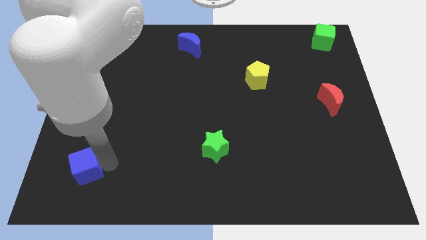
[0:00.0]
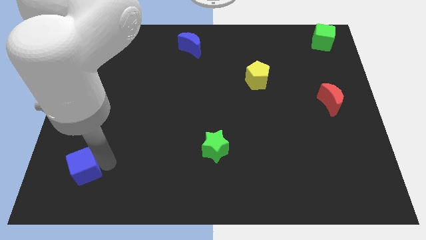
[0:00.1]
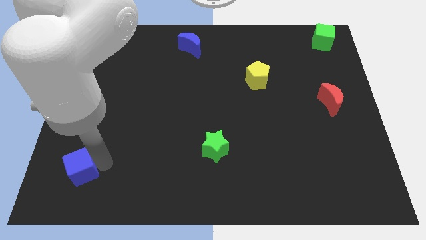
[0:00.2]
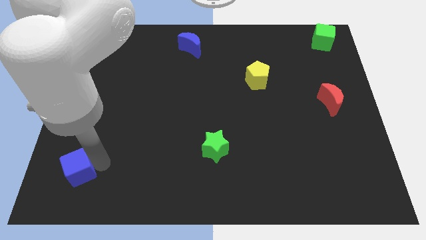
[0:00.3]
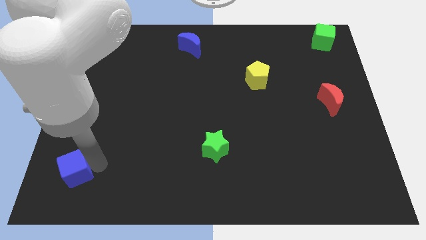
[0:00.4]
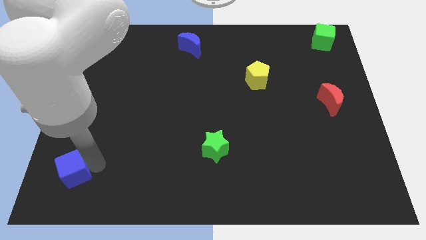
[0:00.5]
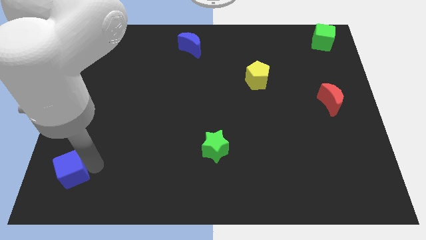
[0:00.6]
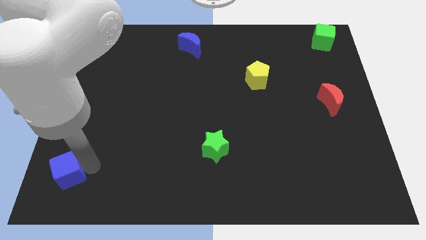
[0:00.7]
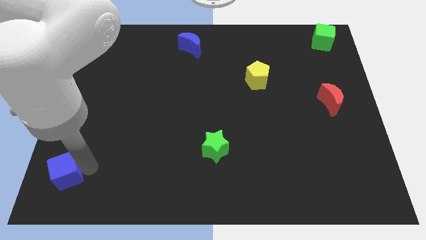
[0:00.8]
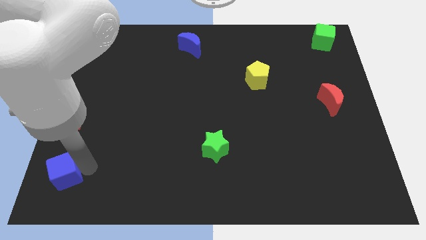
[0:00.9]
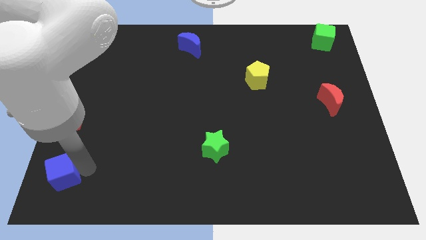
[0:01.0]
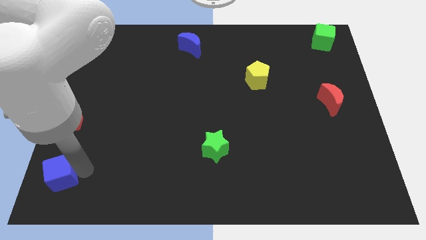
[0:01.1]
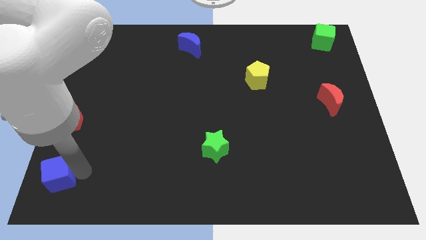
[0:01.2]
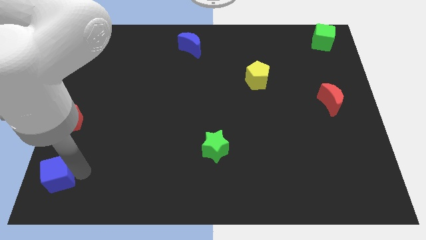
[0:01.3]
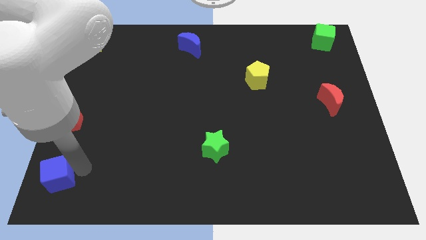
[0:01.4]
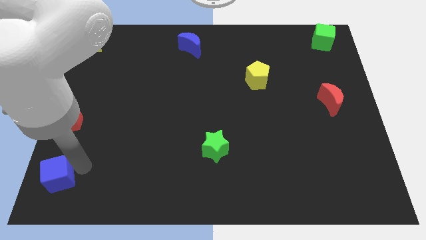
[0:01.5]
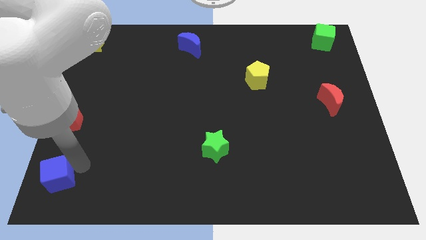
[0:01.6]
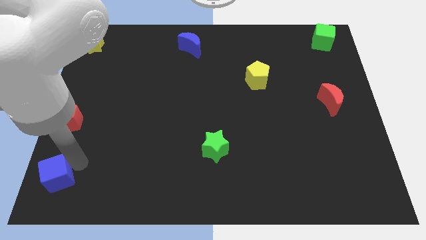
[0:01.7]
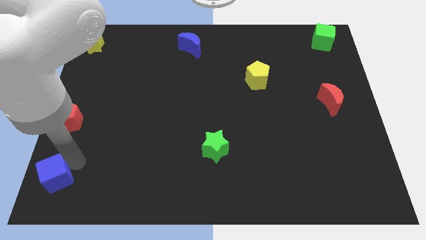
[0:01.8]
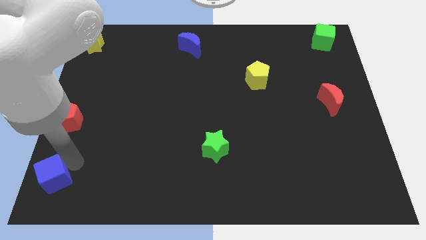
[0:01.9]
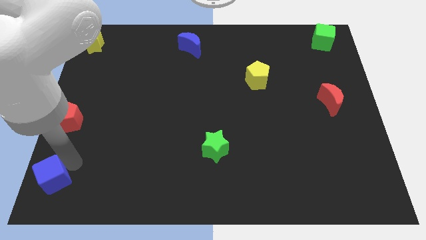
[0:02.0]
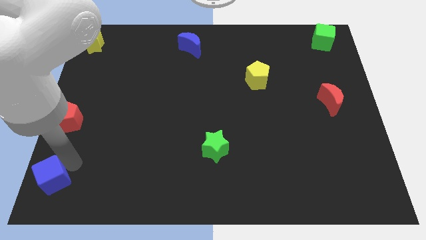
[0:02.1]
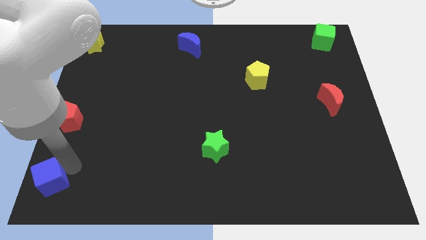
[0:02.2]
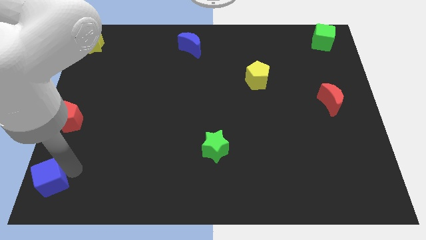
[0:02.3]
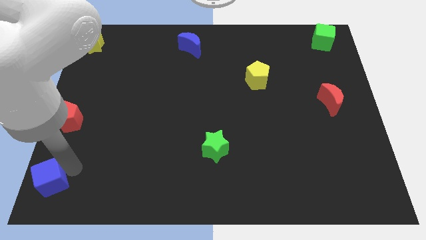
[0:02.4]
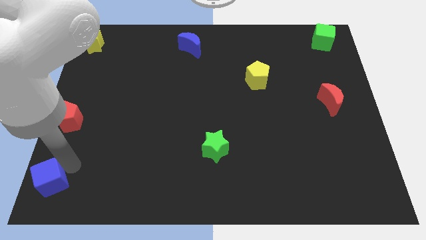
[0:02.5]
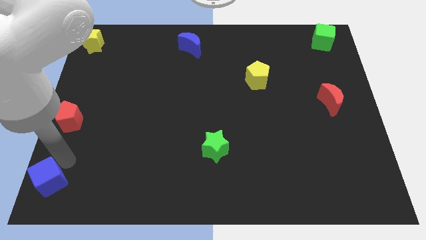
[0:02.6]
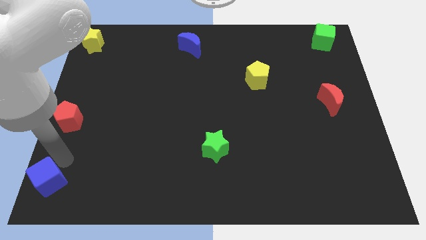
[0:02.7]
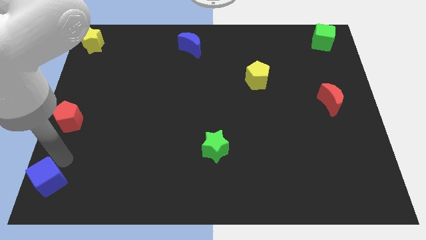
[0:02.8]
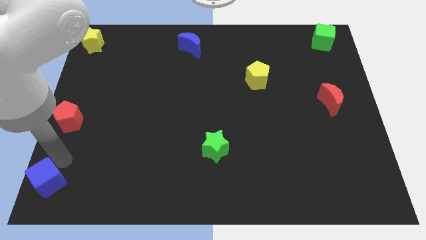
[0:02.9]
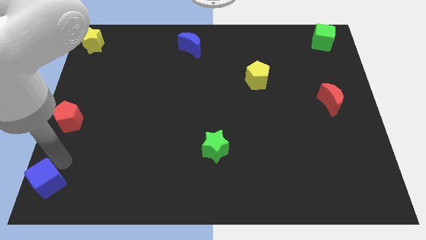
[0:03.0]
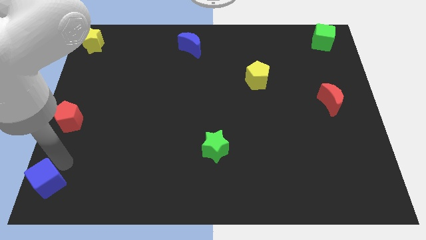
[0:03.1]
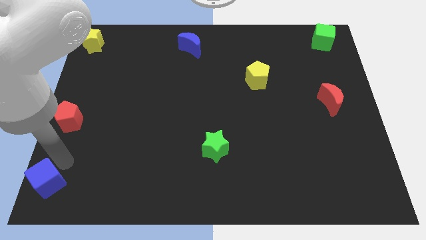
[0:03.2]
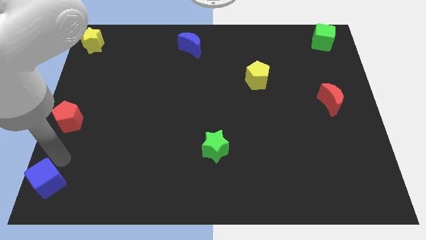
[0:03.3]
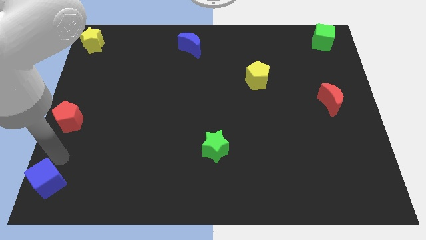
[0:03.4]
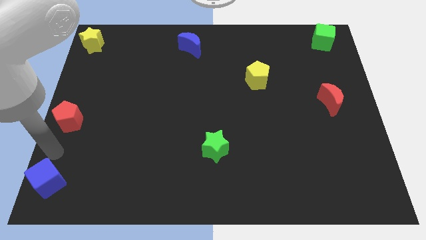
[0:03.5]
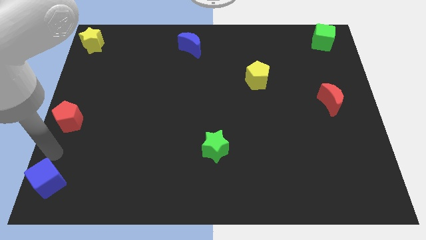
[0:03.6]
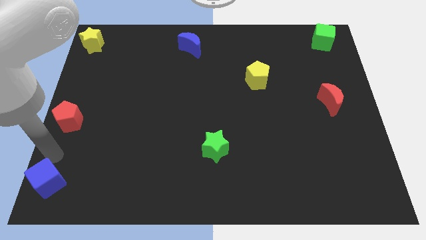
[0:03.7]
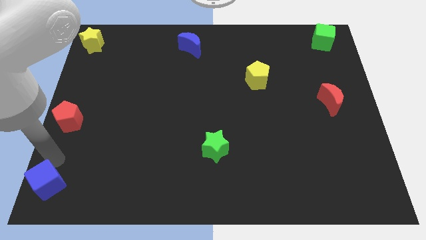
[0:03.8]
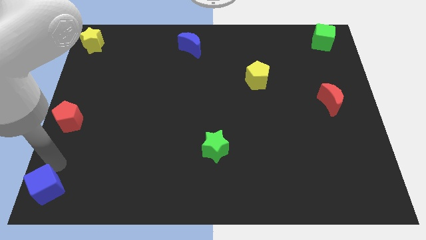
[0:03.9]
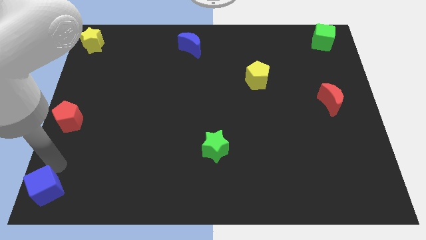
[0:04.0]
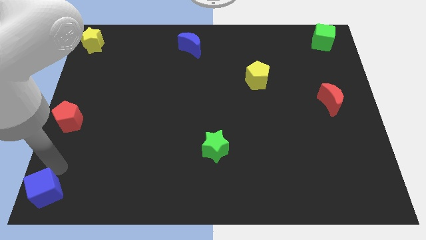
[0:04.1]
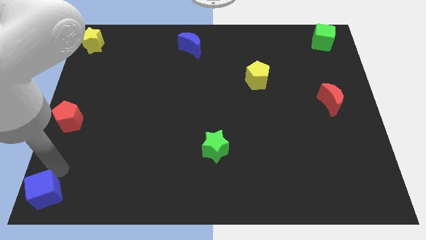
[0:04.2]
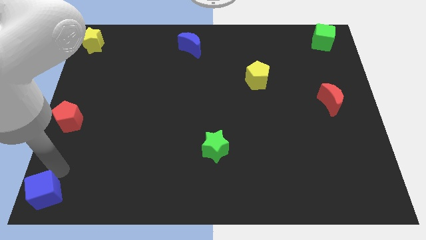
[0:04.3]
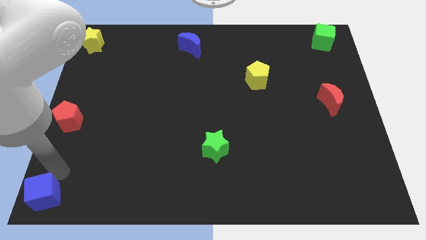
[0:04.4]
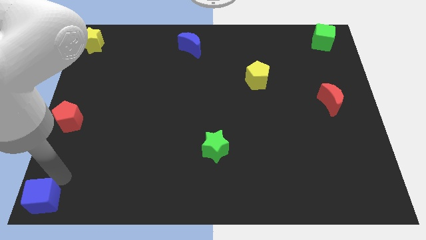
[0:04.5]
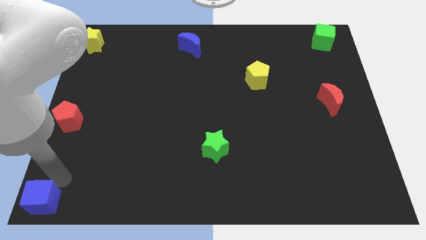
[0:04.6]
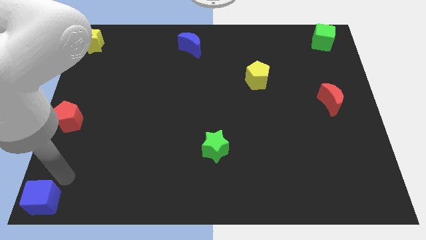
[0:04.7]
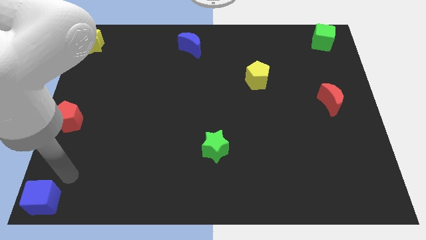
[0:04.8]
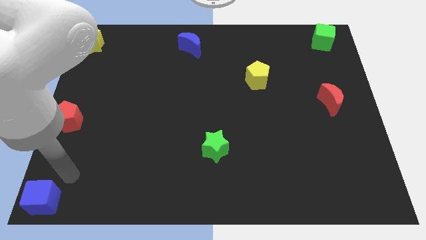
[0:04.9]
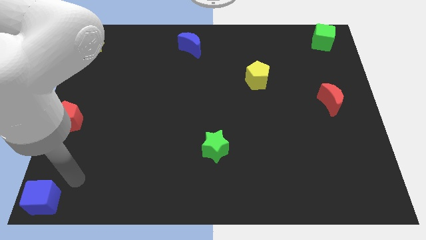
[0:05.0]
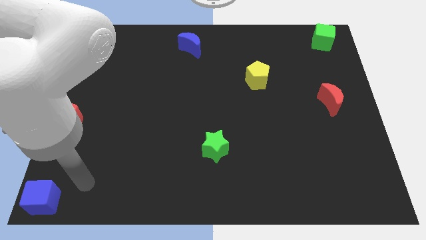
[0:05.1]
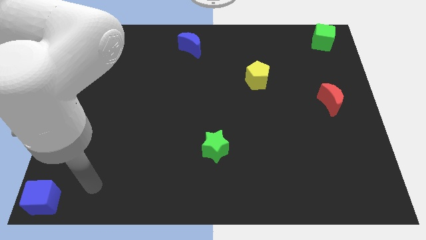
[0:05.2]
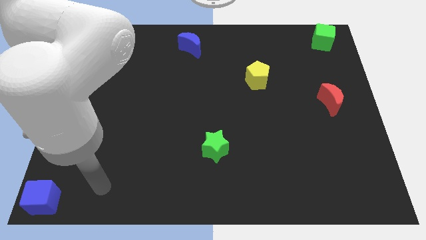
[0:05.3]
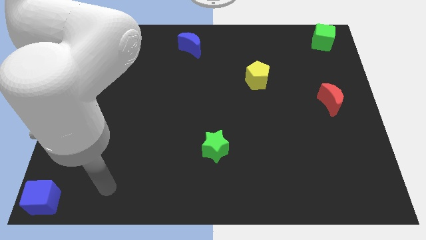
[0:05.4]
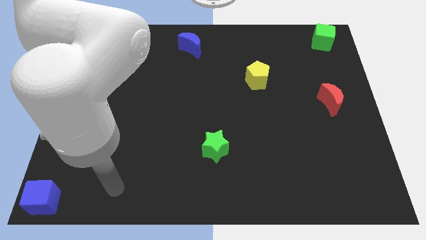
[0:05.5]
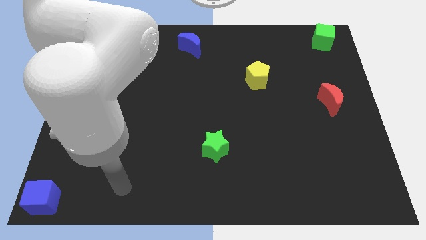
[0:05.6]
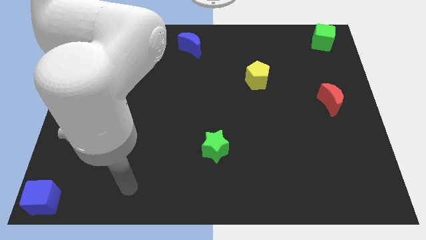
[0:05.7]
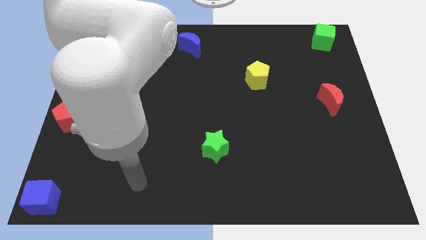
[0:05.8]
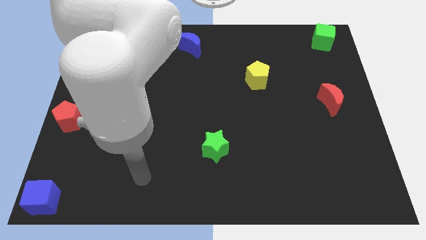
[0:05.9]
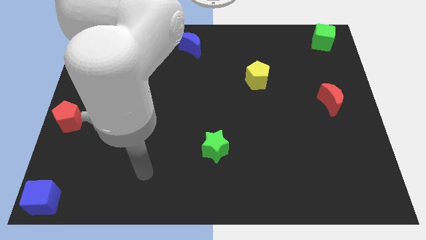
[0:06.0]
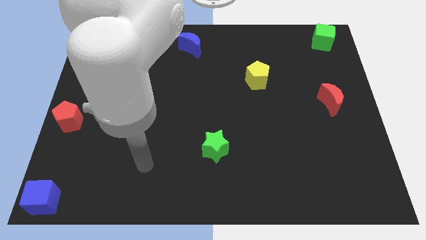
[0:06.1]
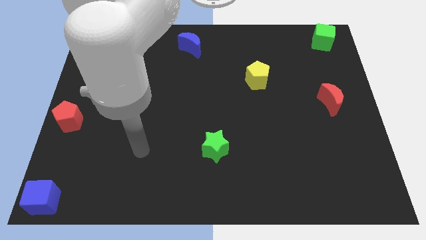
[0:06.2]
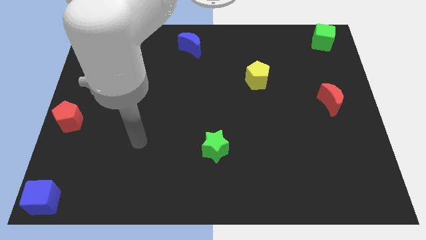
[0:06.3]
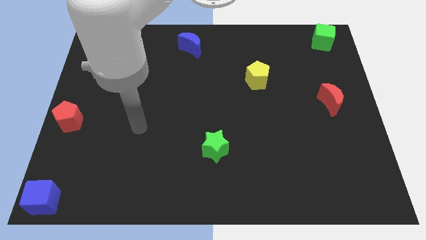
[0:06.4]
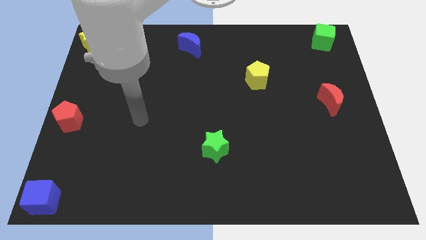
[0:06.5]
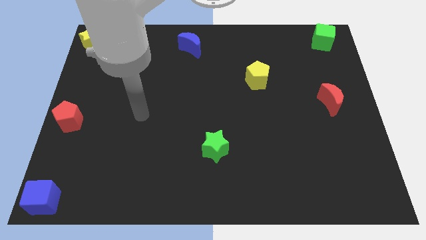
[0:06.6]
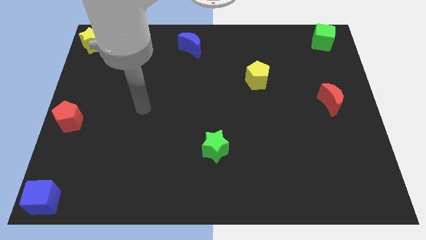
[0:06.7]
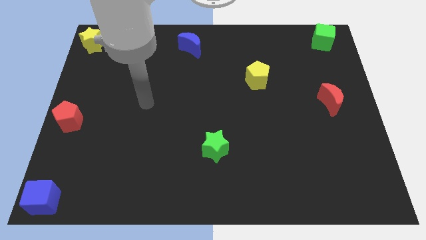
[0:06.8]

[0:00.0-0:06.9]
move the blue cube to the bottom left corner of the board

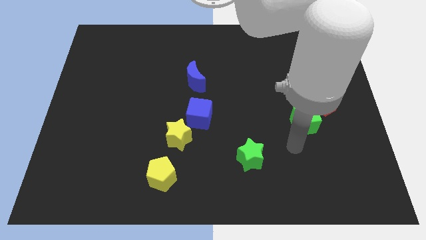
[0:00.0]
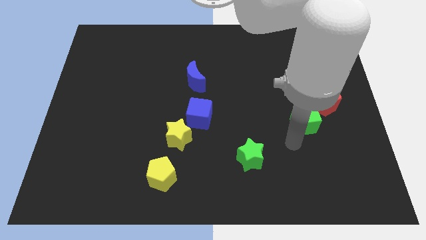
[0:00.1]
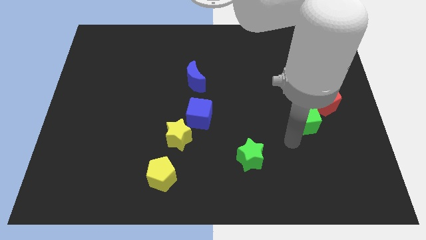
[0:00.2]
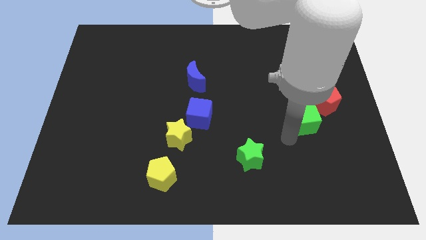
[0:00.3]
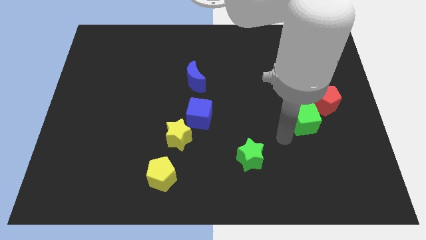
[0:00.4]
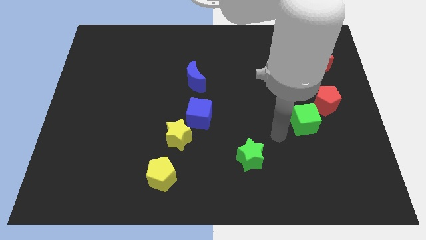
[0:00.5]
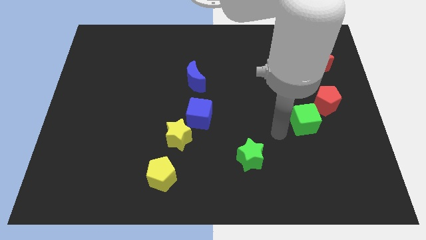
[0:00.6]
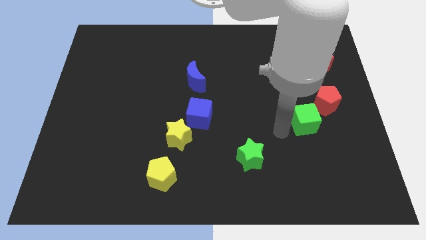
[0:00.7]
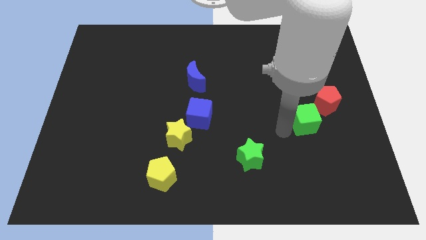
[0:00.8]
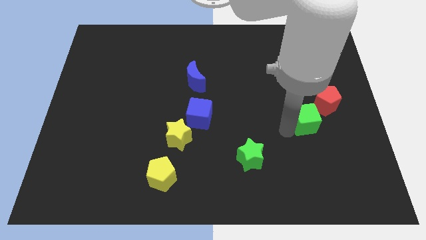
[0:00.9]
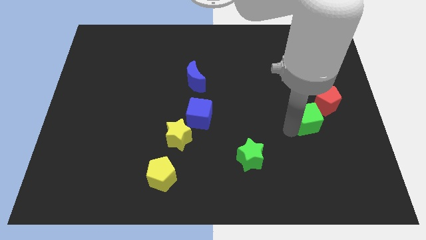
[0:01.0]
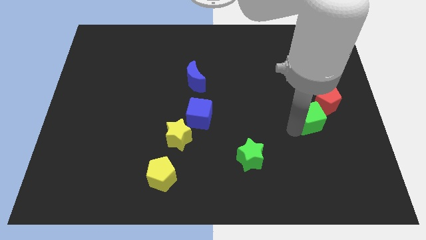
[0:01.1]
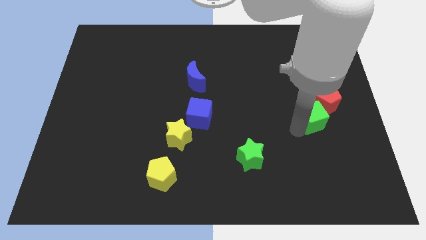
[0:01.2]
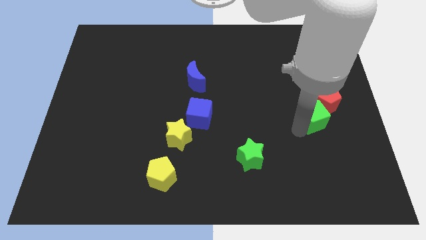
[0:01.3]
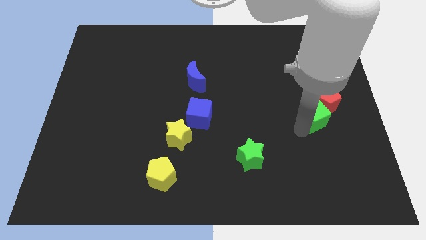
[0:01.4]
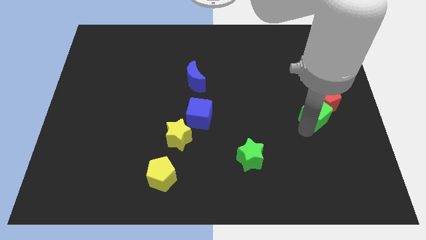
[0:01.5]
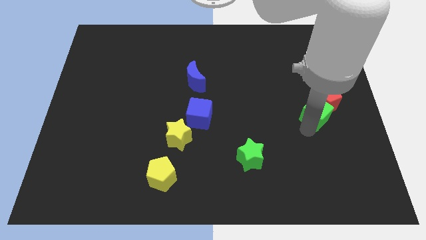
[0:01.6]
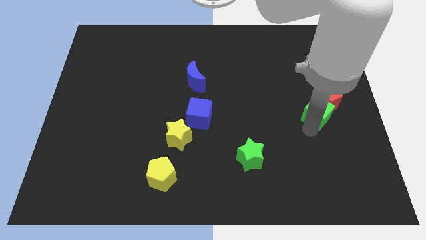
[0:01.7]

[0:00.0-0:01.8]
push the green cube into the red pentagon

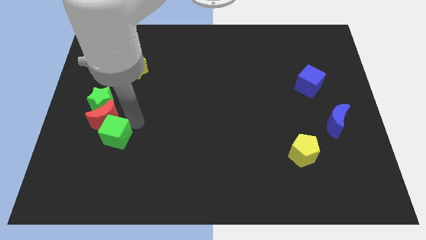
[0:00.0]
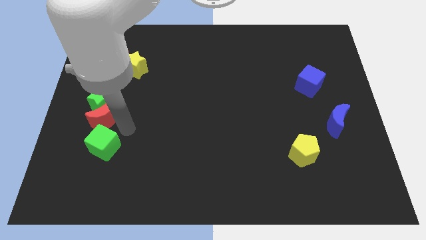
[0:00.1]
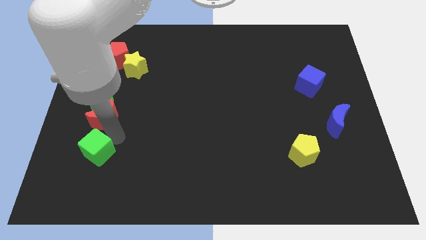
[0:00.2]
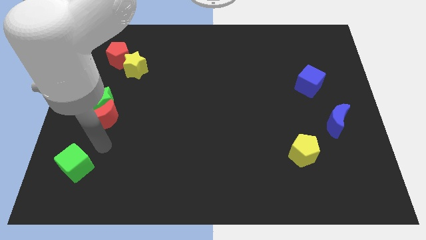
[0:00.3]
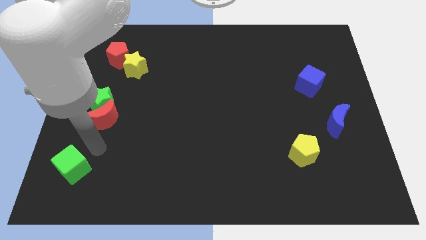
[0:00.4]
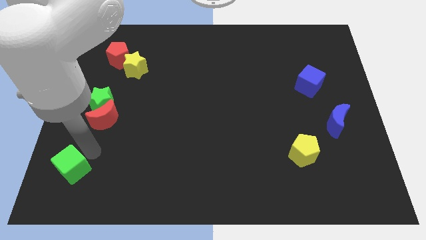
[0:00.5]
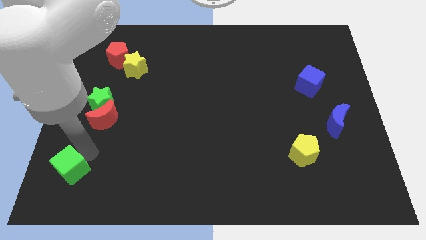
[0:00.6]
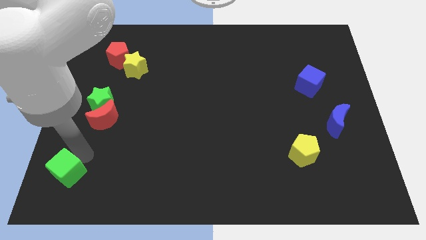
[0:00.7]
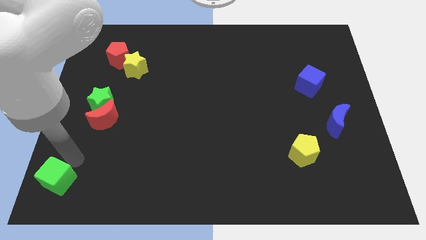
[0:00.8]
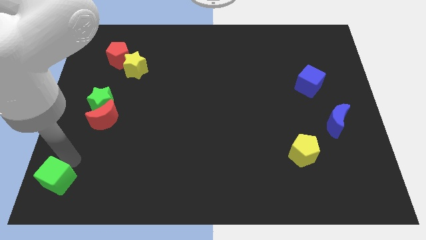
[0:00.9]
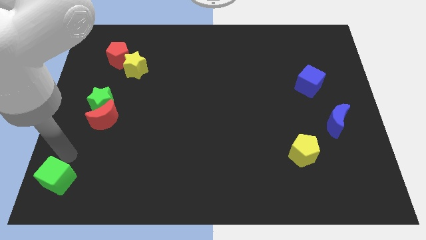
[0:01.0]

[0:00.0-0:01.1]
push the green cube towards bottom left
